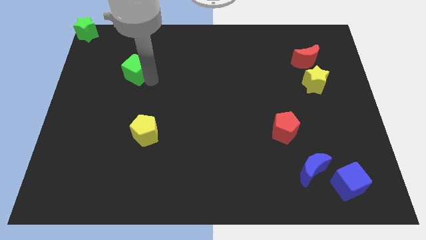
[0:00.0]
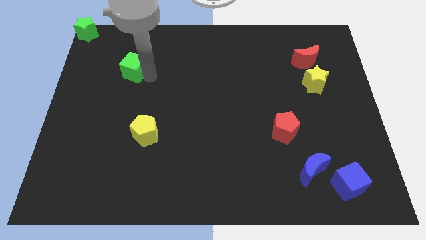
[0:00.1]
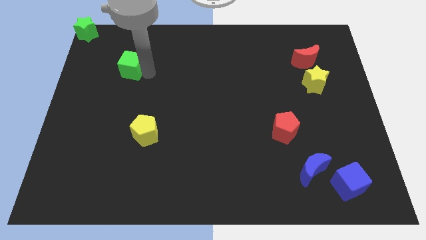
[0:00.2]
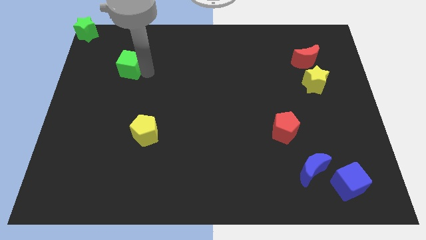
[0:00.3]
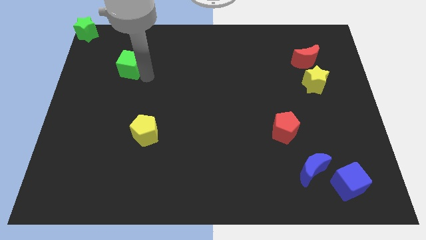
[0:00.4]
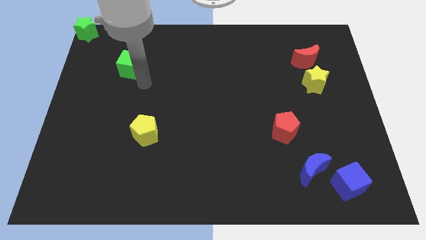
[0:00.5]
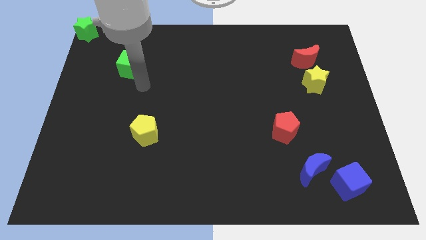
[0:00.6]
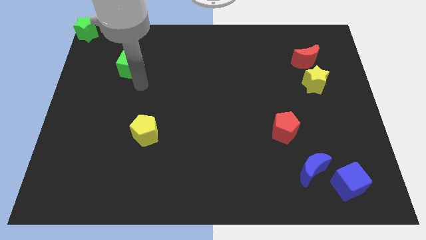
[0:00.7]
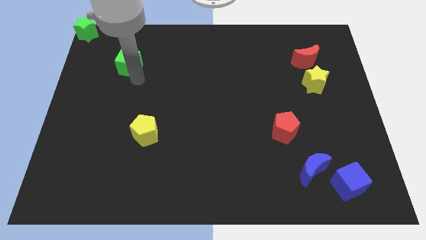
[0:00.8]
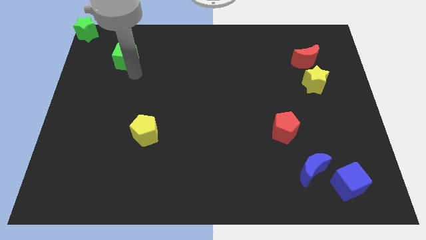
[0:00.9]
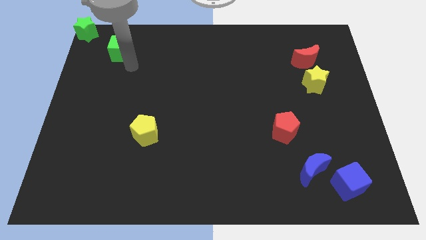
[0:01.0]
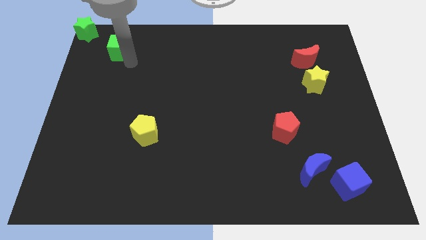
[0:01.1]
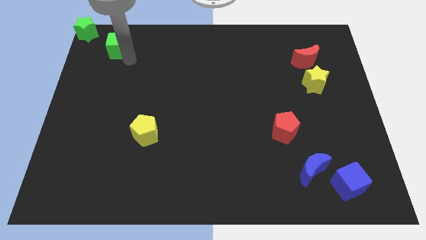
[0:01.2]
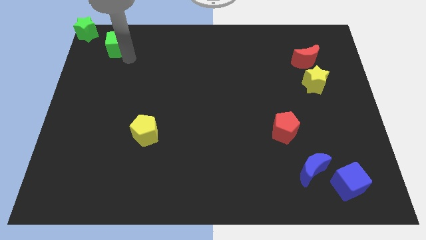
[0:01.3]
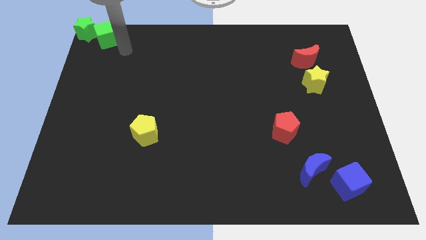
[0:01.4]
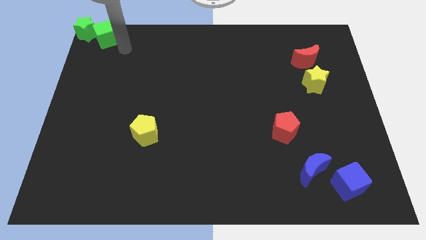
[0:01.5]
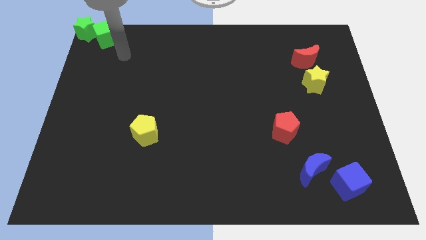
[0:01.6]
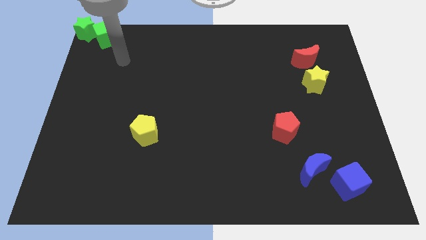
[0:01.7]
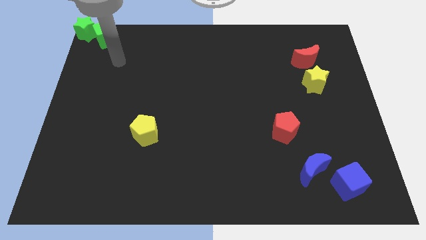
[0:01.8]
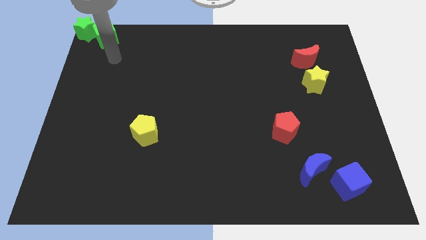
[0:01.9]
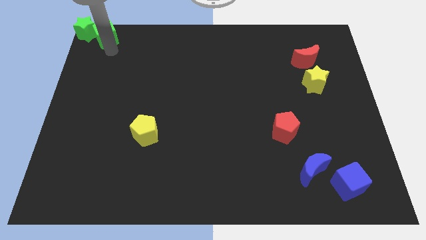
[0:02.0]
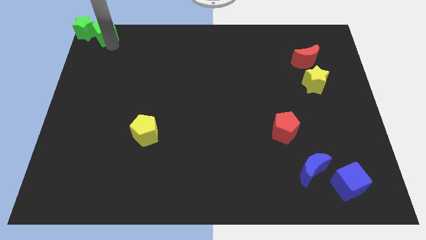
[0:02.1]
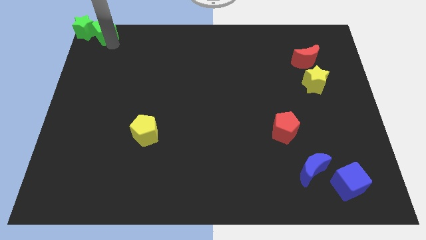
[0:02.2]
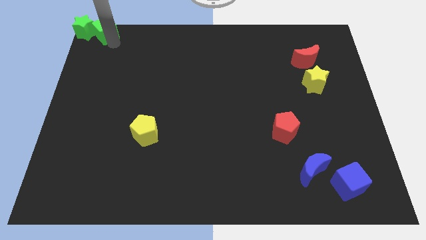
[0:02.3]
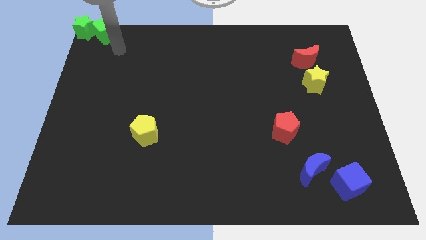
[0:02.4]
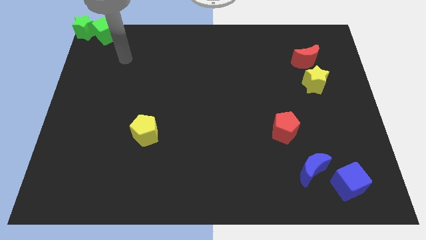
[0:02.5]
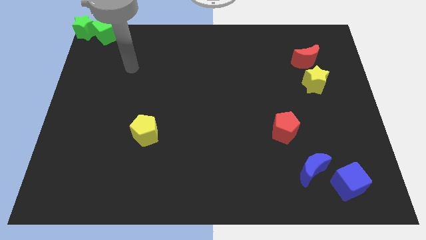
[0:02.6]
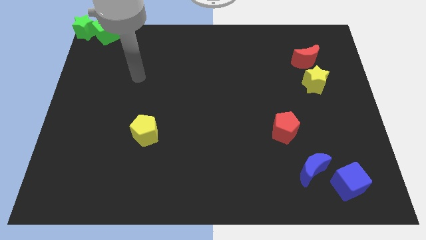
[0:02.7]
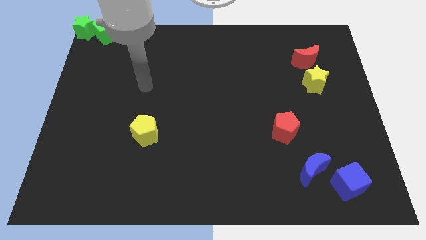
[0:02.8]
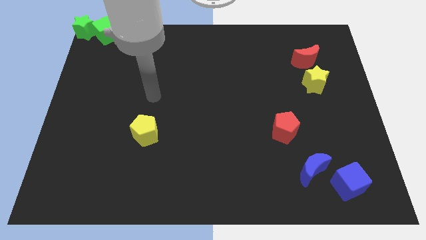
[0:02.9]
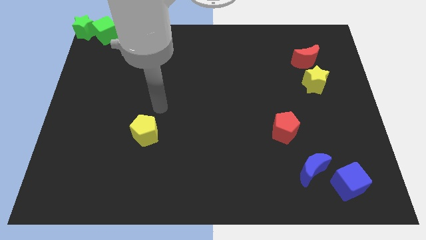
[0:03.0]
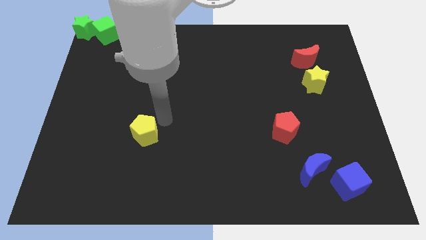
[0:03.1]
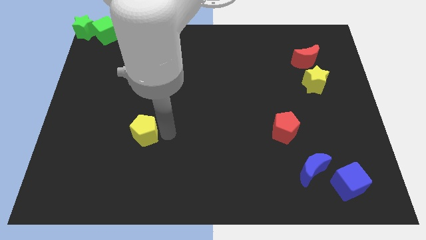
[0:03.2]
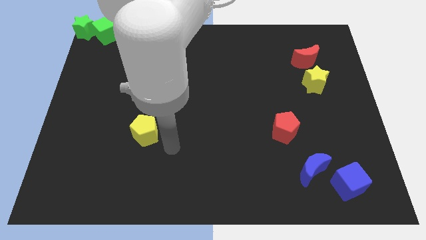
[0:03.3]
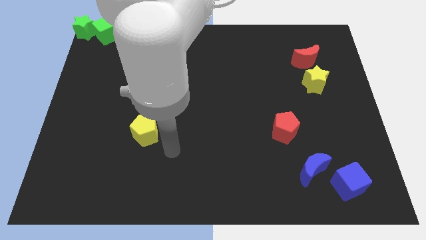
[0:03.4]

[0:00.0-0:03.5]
push the green cube into the green star

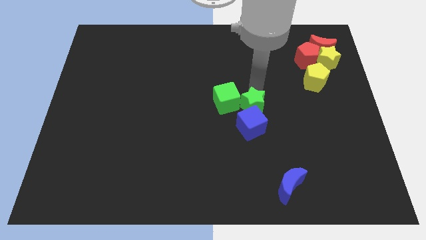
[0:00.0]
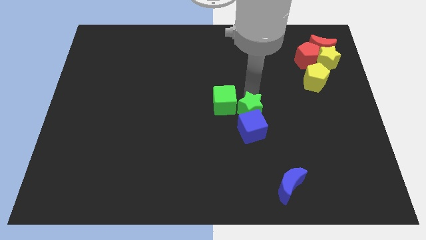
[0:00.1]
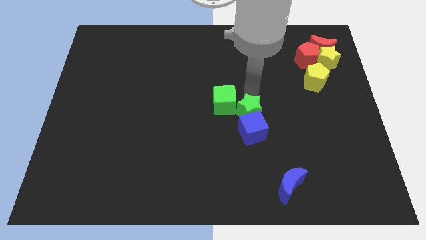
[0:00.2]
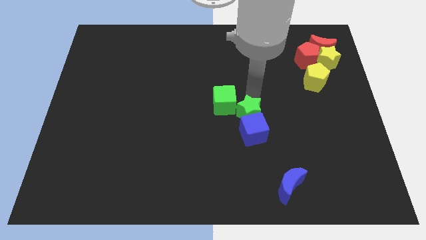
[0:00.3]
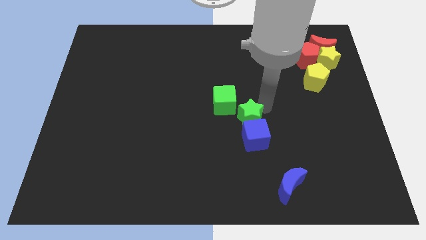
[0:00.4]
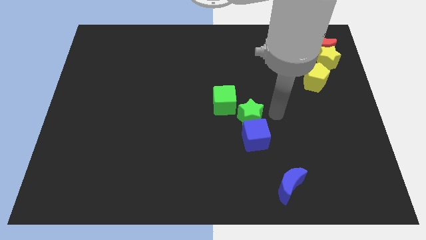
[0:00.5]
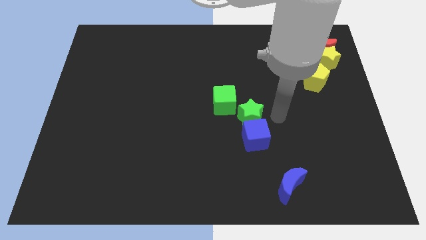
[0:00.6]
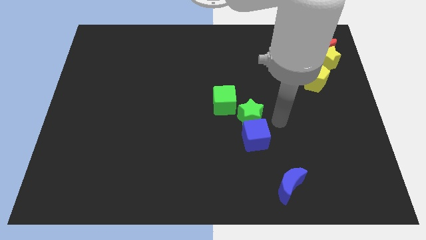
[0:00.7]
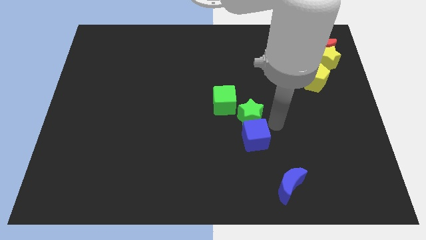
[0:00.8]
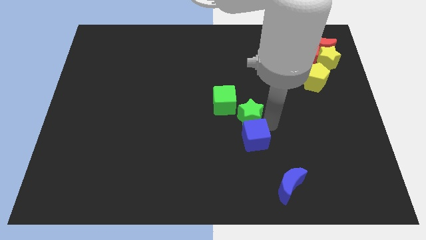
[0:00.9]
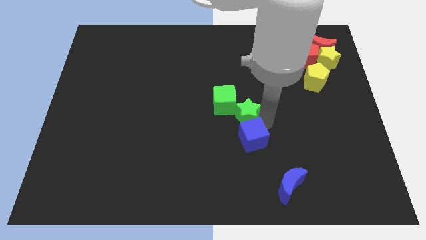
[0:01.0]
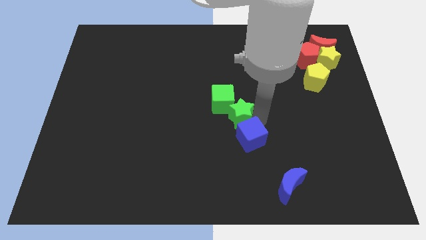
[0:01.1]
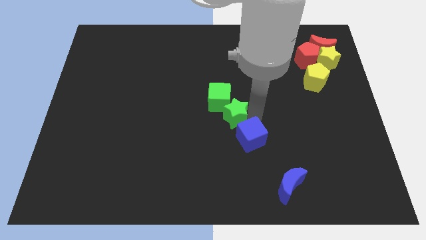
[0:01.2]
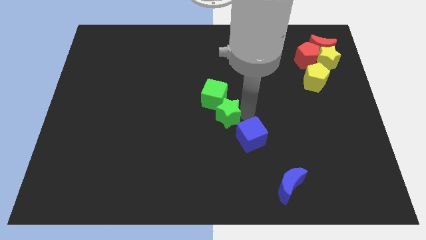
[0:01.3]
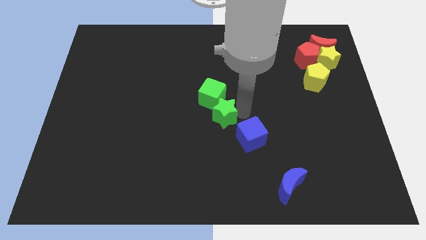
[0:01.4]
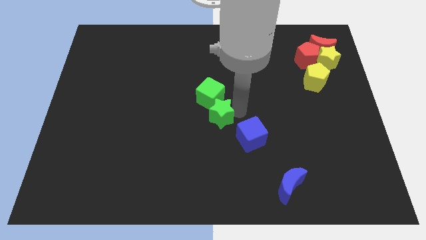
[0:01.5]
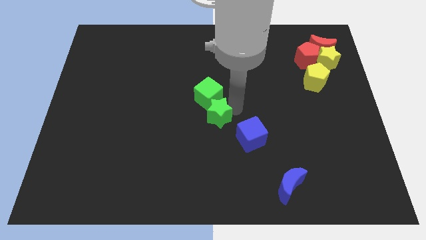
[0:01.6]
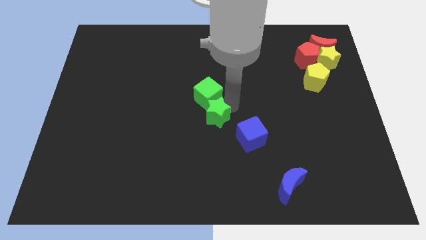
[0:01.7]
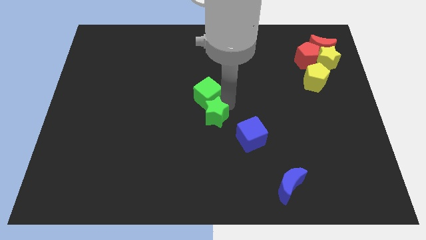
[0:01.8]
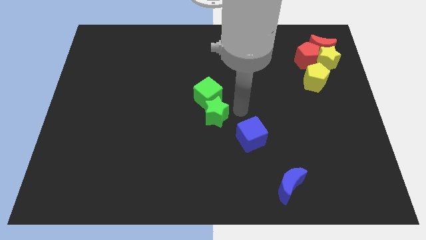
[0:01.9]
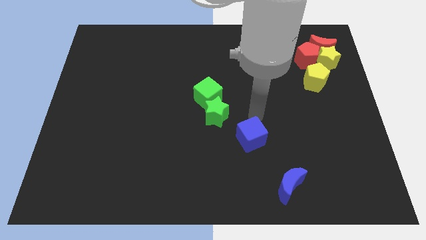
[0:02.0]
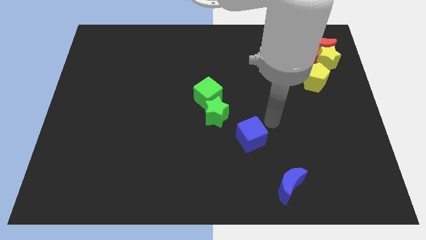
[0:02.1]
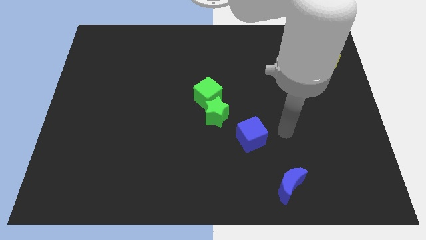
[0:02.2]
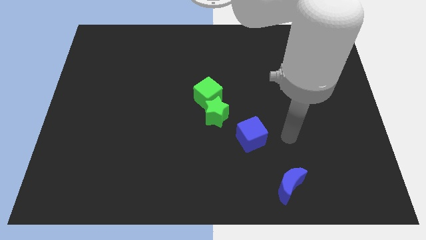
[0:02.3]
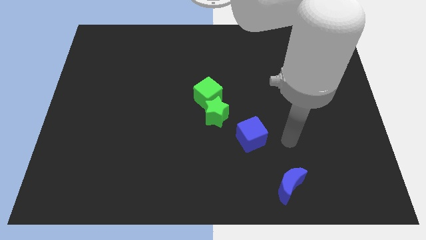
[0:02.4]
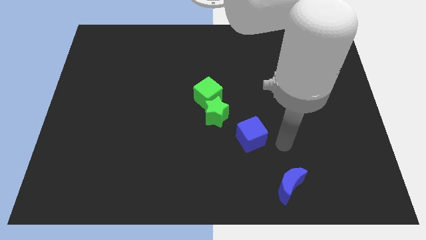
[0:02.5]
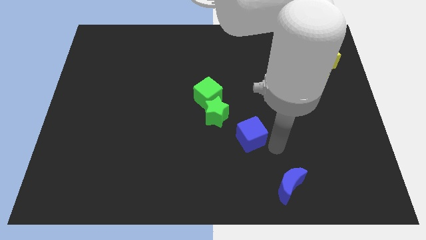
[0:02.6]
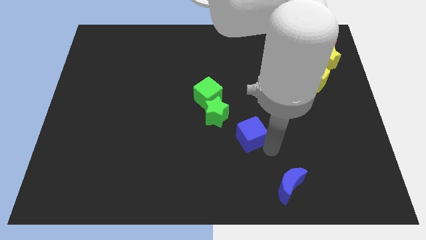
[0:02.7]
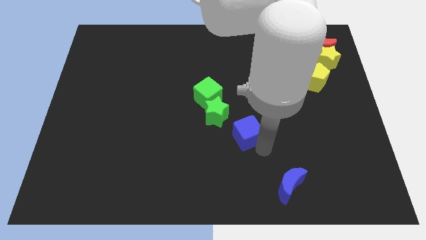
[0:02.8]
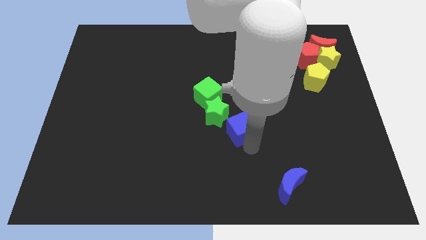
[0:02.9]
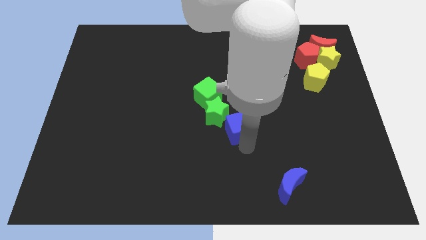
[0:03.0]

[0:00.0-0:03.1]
move green star into green cube

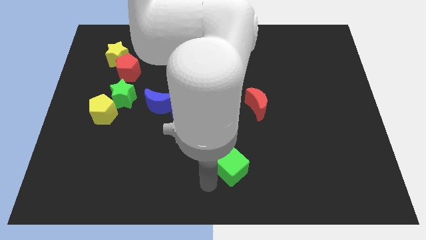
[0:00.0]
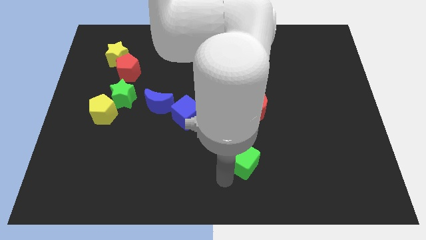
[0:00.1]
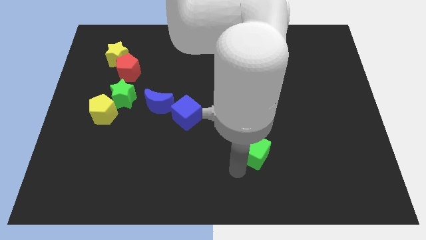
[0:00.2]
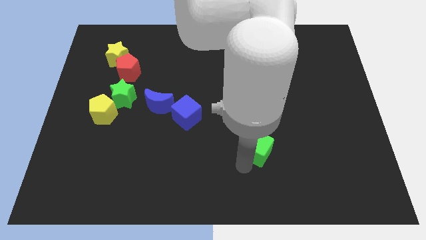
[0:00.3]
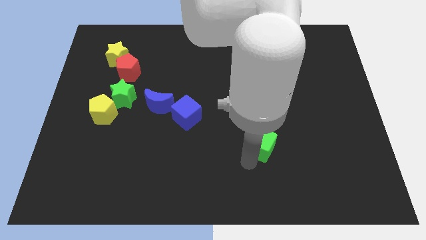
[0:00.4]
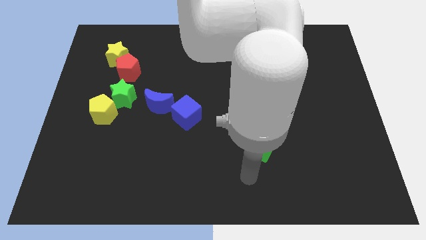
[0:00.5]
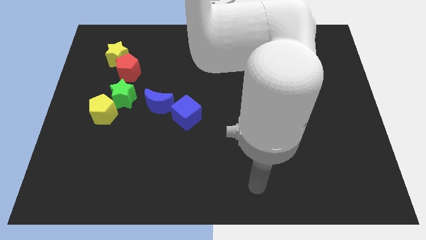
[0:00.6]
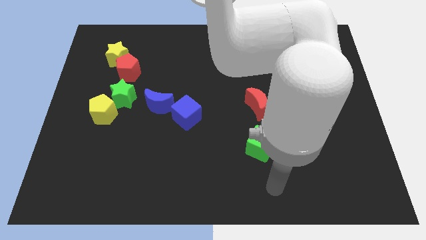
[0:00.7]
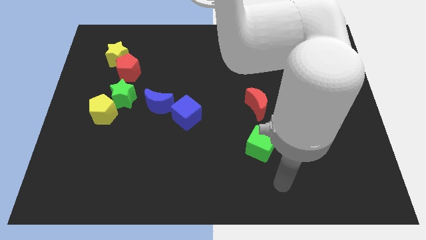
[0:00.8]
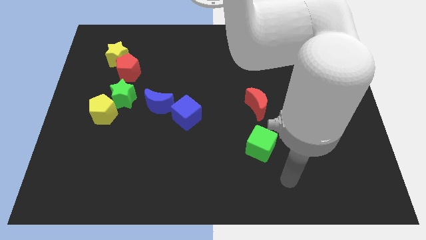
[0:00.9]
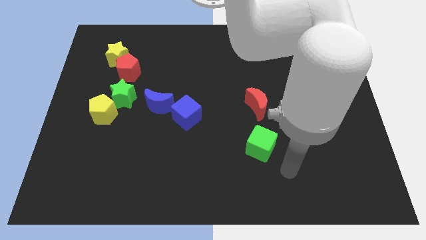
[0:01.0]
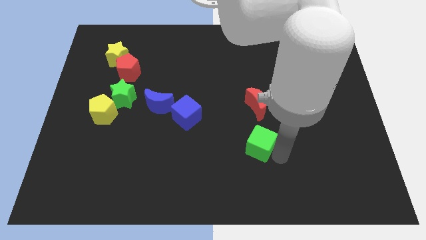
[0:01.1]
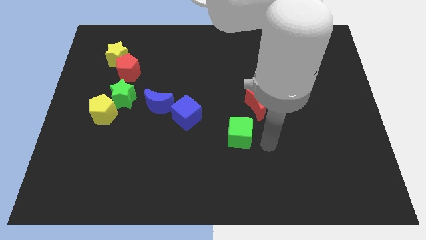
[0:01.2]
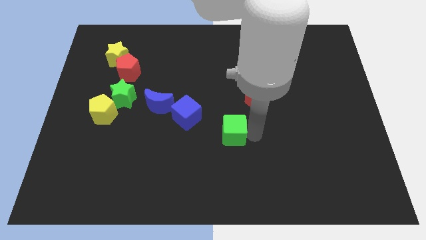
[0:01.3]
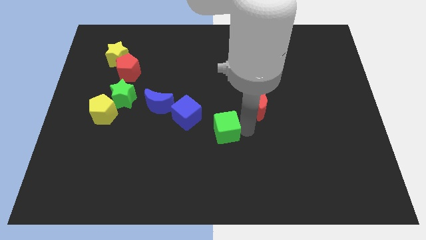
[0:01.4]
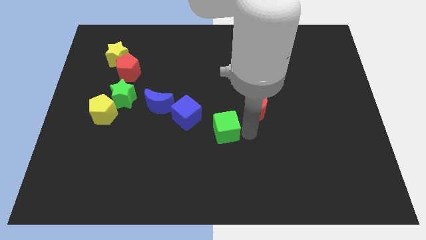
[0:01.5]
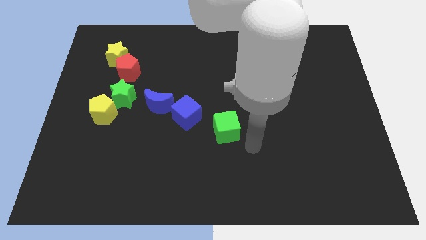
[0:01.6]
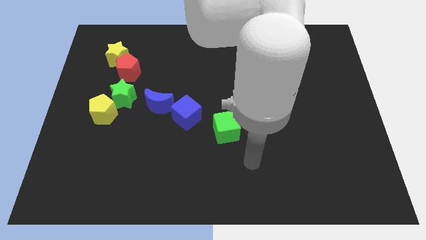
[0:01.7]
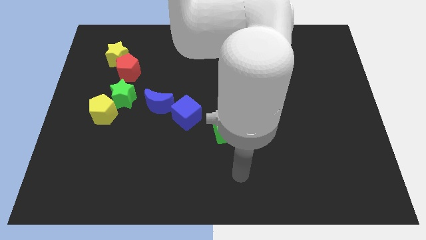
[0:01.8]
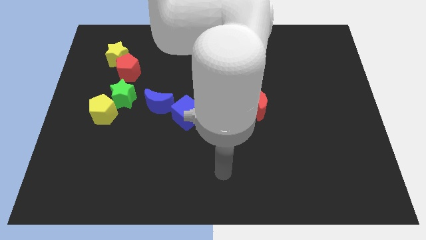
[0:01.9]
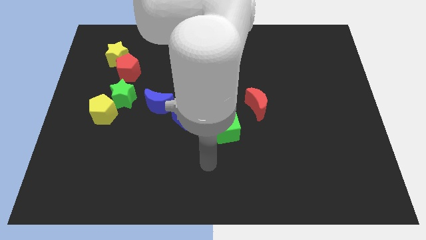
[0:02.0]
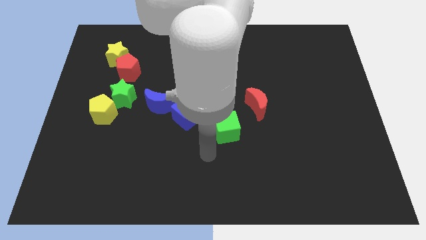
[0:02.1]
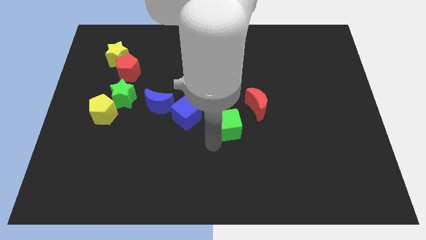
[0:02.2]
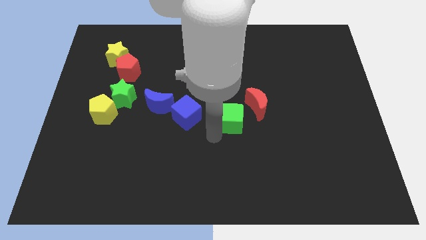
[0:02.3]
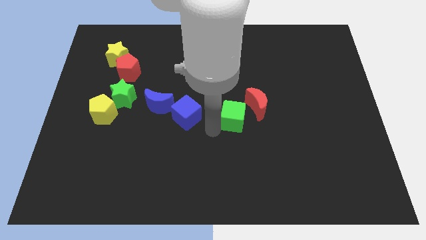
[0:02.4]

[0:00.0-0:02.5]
put the green cube to the right of the blue cube
